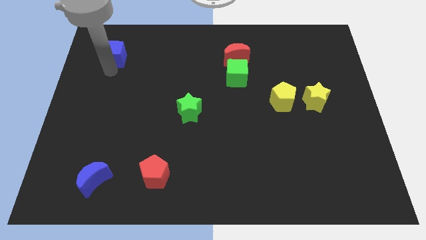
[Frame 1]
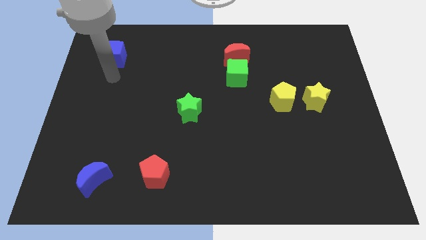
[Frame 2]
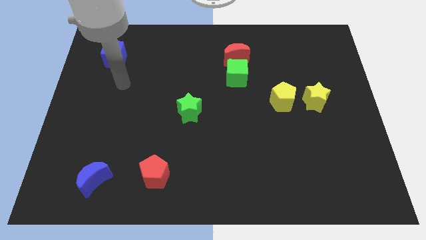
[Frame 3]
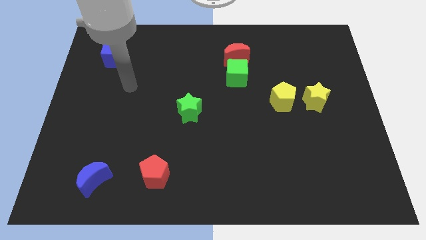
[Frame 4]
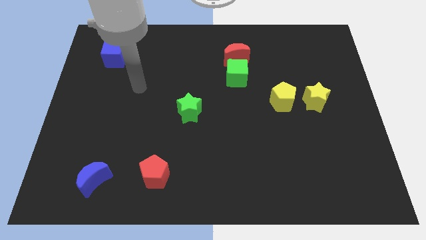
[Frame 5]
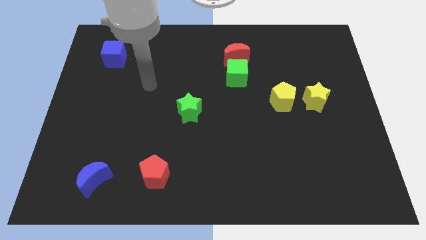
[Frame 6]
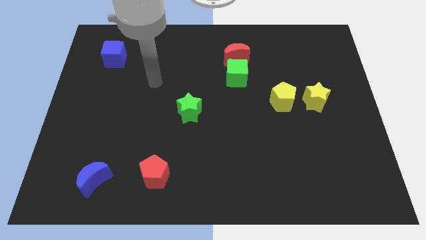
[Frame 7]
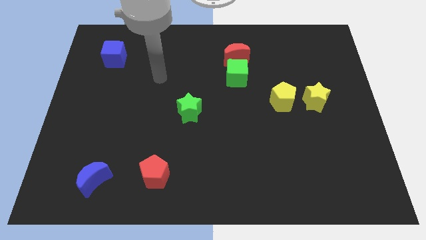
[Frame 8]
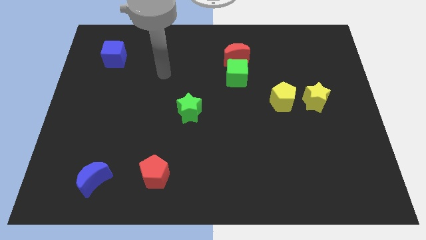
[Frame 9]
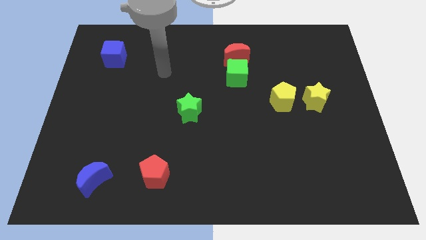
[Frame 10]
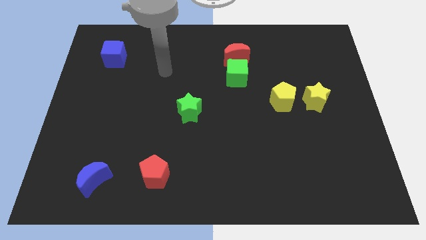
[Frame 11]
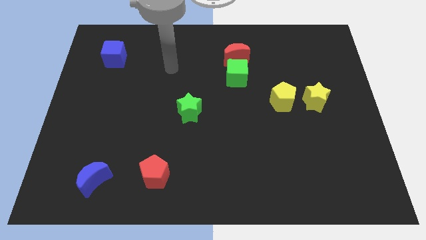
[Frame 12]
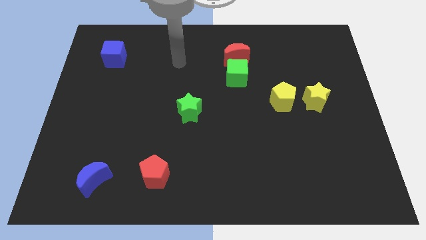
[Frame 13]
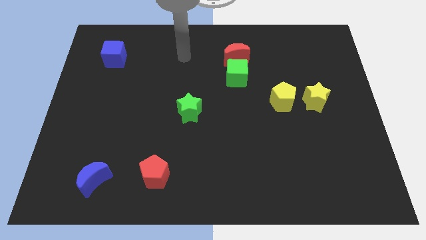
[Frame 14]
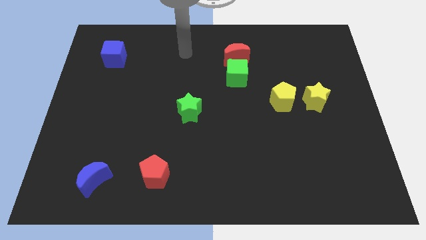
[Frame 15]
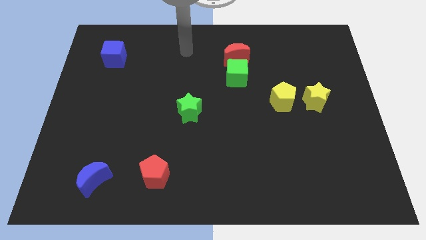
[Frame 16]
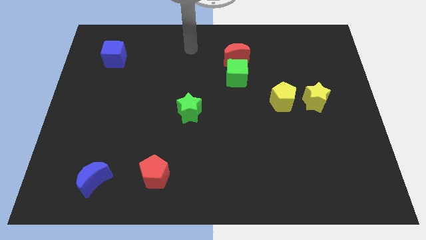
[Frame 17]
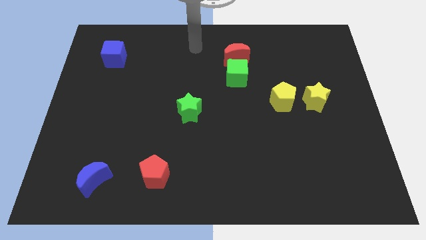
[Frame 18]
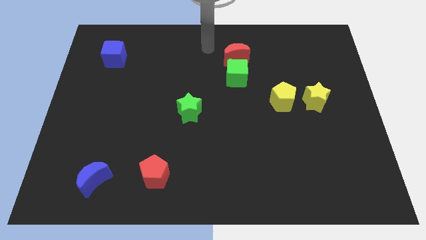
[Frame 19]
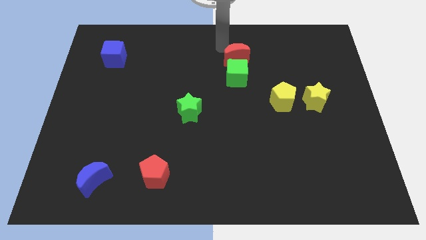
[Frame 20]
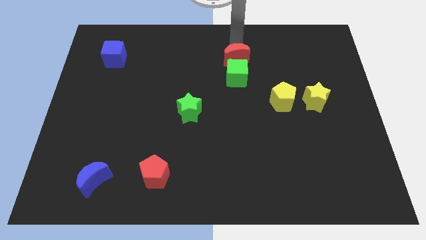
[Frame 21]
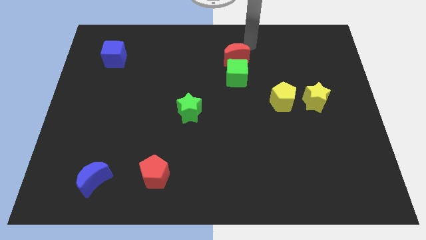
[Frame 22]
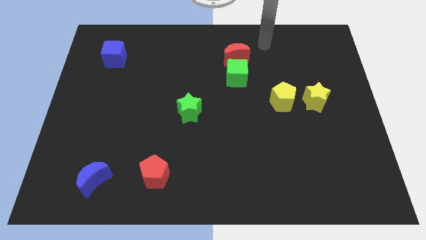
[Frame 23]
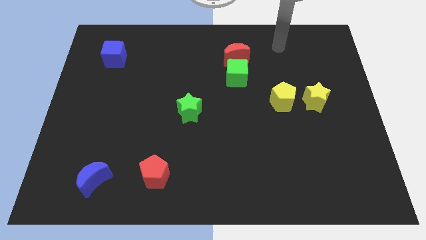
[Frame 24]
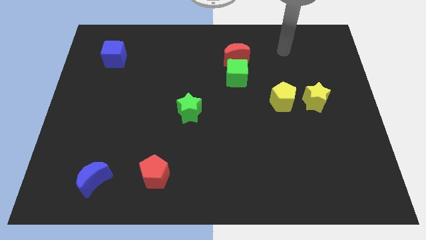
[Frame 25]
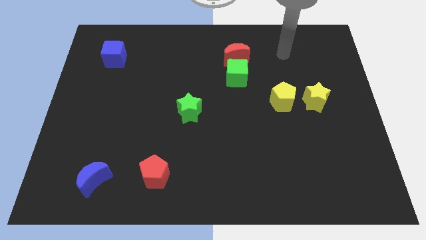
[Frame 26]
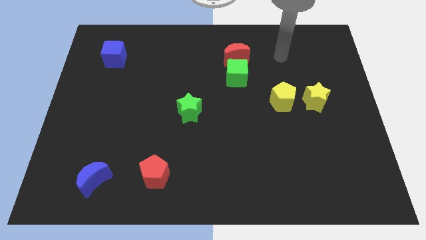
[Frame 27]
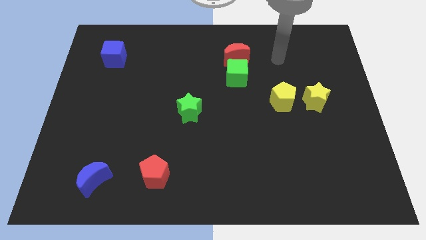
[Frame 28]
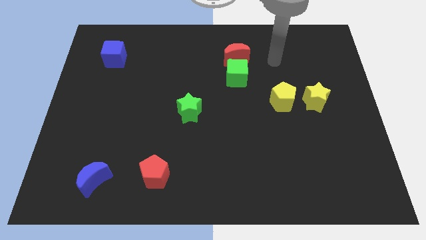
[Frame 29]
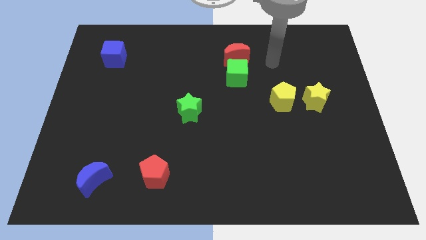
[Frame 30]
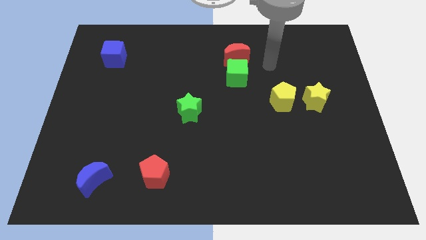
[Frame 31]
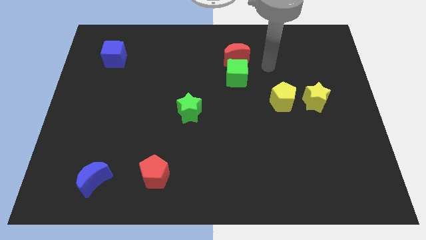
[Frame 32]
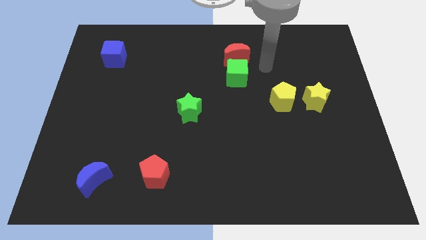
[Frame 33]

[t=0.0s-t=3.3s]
go away from the blue cube

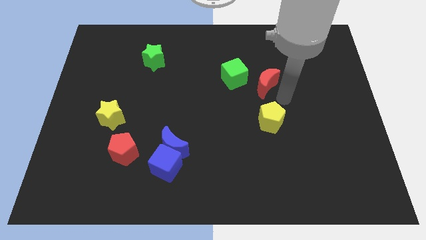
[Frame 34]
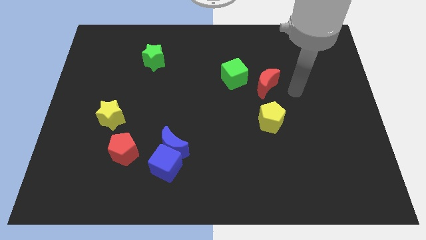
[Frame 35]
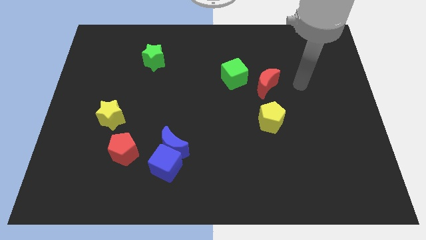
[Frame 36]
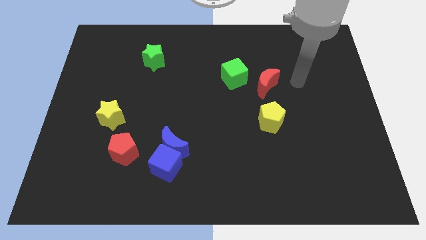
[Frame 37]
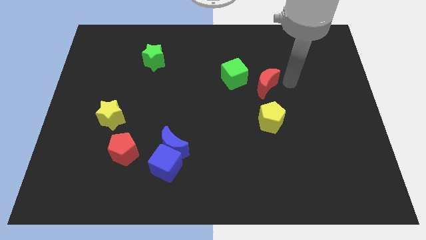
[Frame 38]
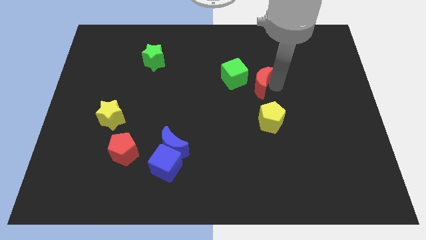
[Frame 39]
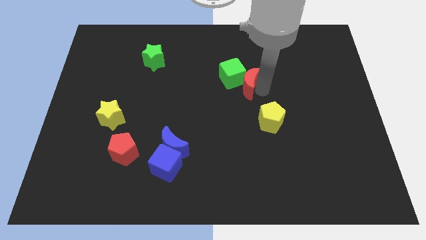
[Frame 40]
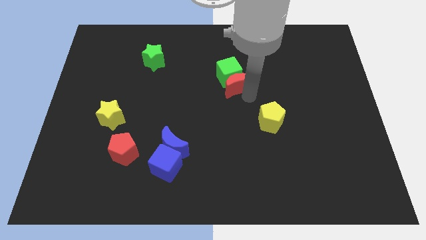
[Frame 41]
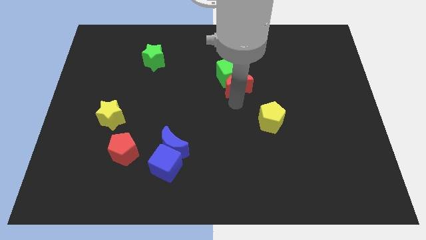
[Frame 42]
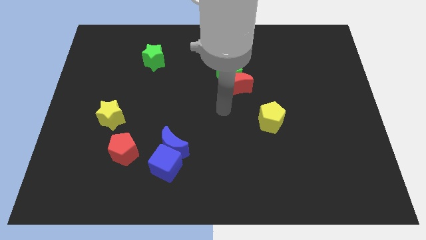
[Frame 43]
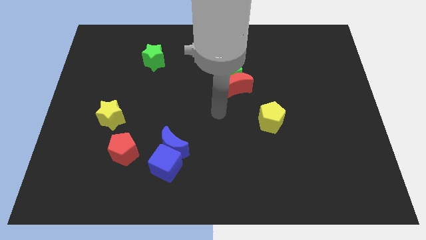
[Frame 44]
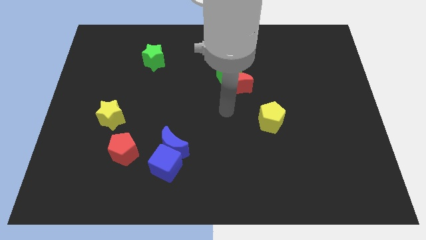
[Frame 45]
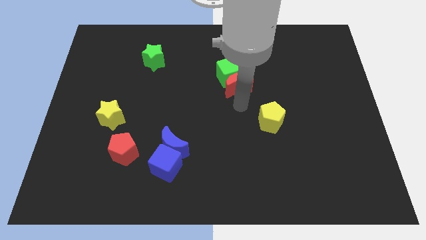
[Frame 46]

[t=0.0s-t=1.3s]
move the red crecent to the bottom side of the green cube

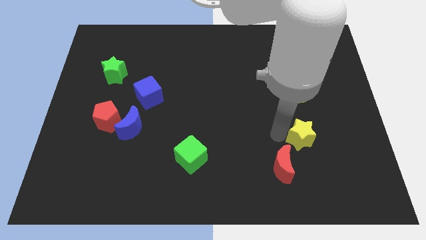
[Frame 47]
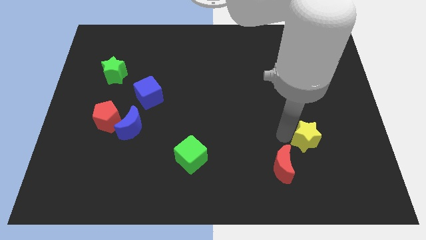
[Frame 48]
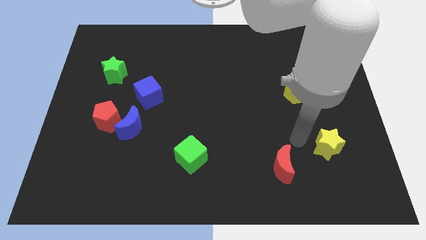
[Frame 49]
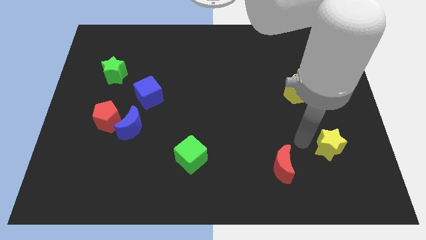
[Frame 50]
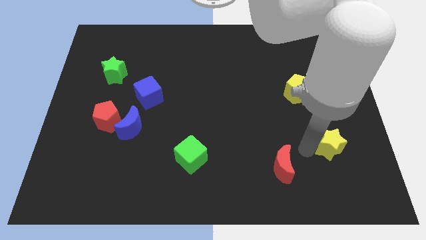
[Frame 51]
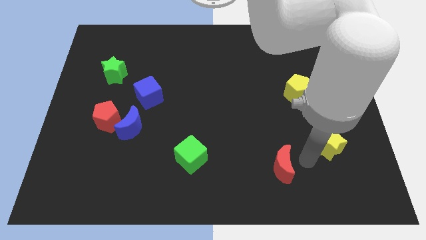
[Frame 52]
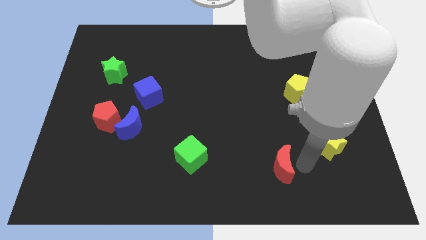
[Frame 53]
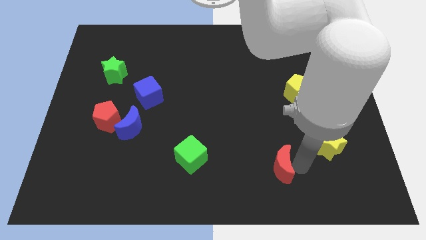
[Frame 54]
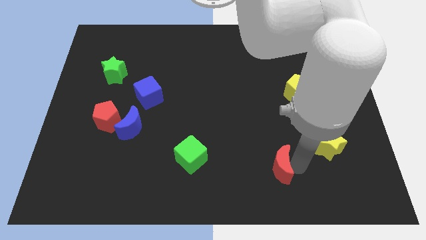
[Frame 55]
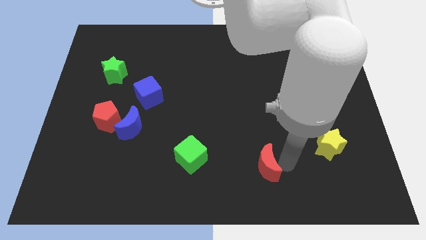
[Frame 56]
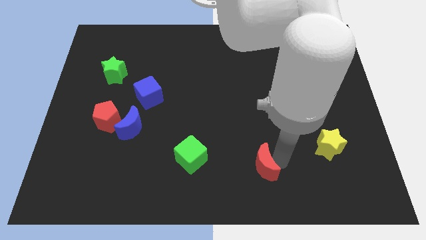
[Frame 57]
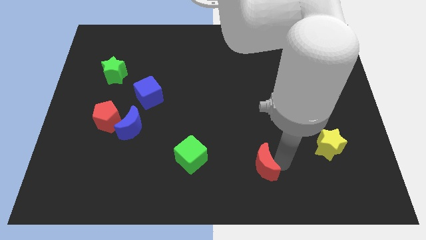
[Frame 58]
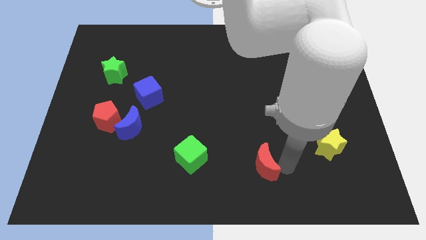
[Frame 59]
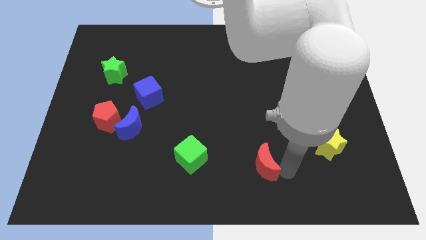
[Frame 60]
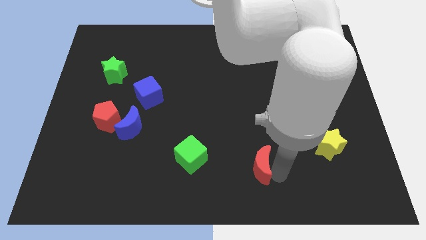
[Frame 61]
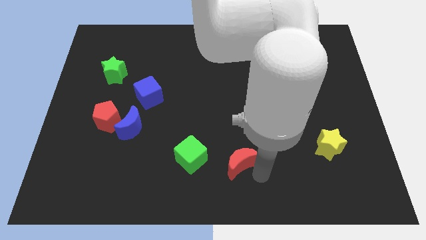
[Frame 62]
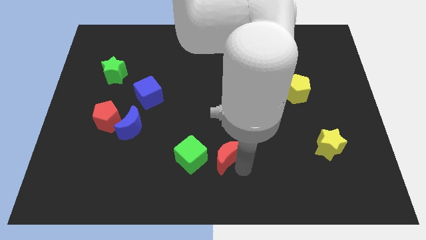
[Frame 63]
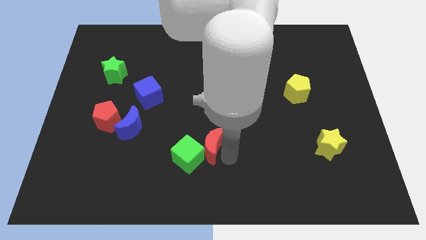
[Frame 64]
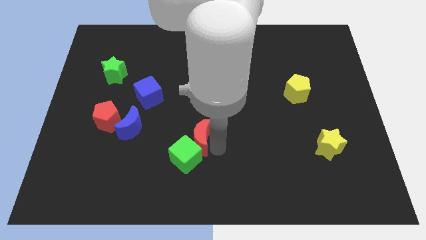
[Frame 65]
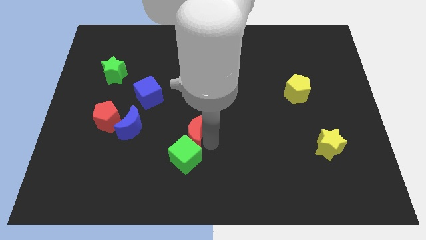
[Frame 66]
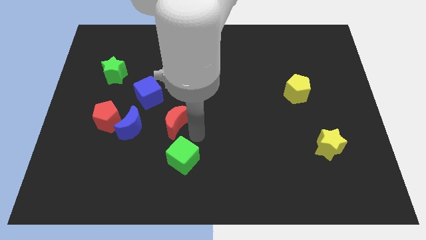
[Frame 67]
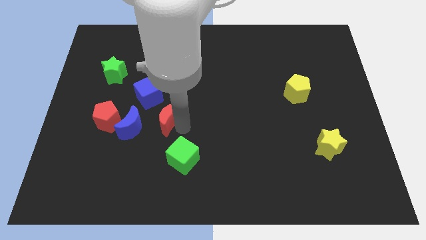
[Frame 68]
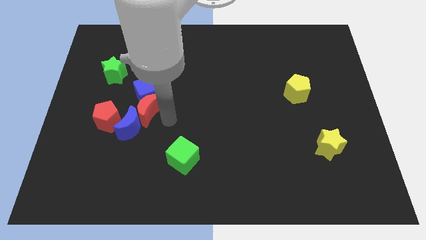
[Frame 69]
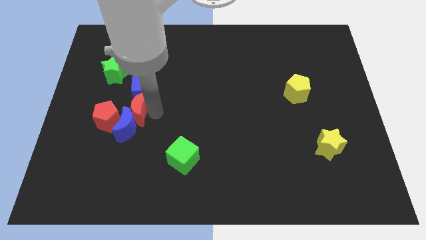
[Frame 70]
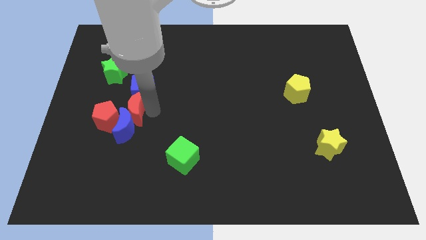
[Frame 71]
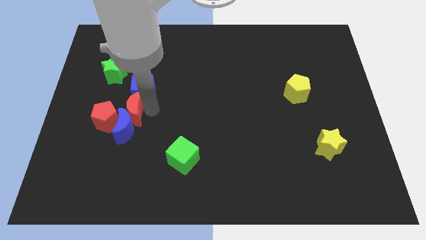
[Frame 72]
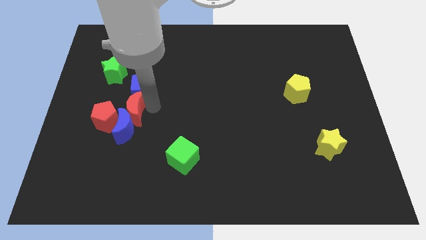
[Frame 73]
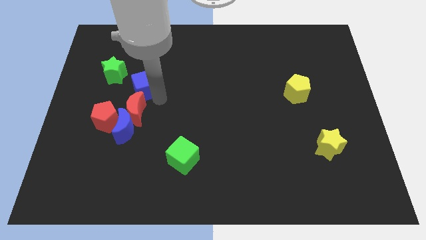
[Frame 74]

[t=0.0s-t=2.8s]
place the red moon in between the blue cube and blue moon

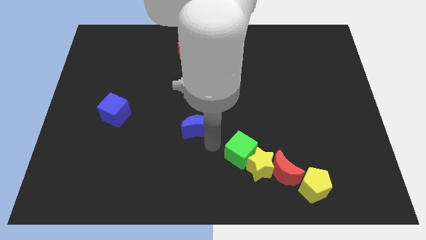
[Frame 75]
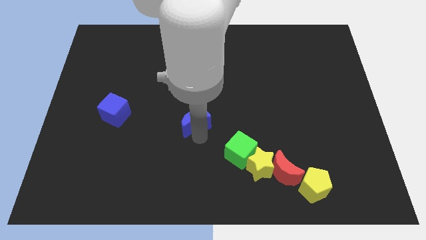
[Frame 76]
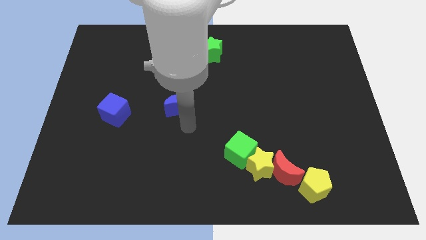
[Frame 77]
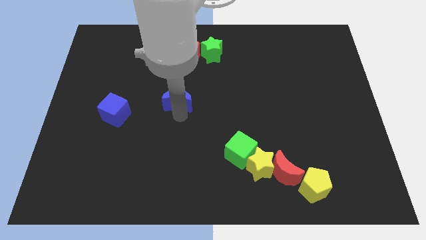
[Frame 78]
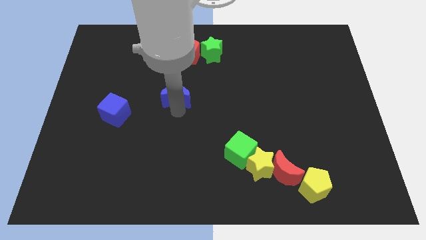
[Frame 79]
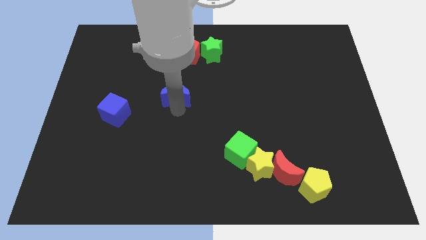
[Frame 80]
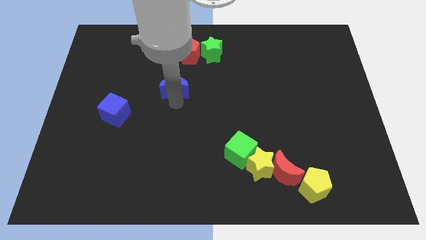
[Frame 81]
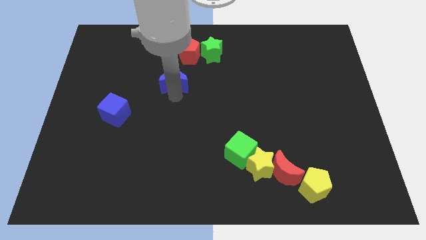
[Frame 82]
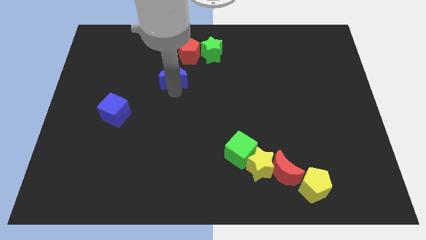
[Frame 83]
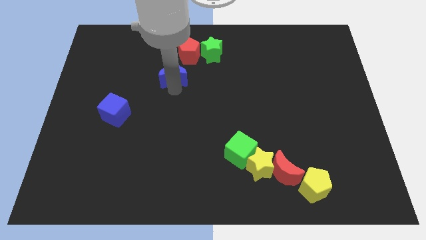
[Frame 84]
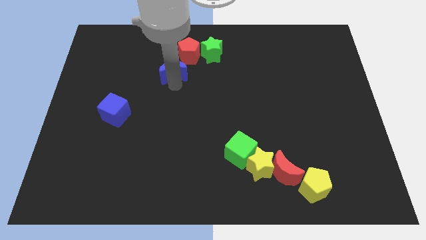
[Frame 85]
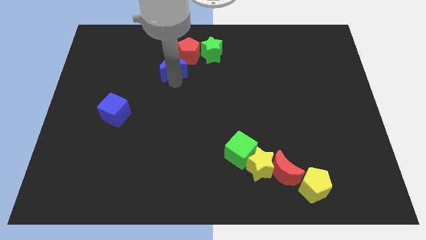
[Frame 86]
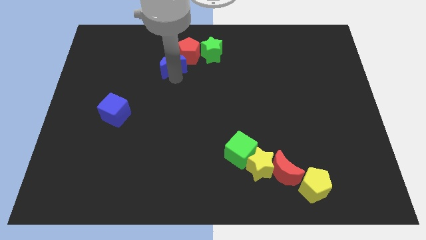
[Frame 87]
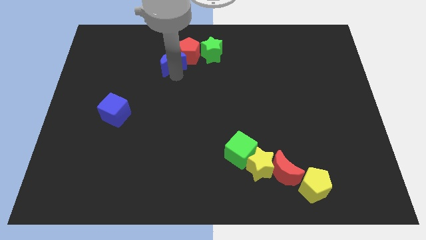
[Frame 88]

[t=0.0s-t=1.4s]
place the blue moon at the bottom left side of red pentagon

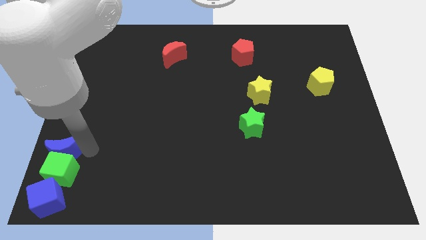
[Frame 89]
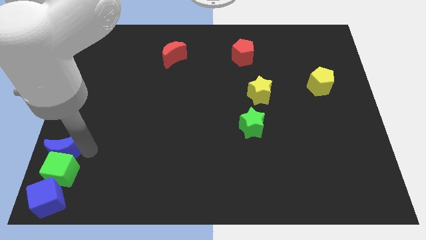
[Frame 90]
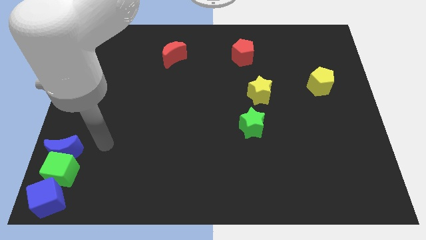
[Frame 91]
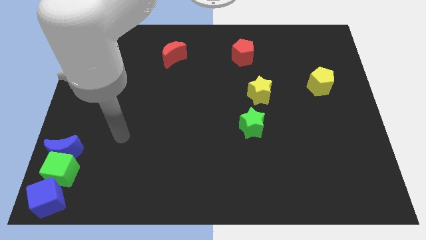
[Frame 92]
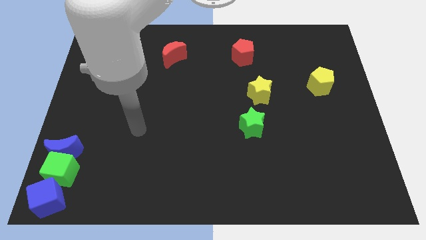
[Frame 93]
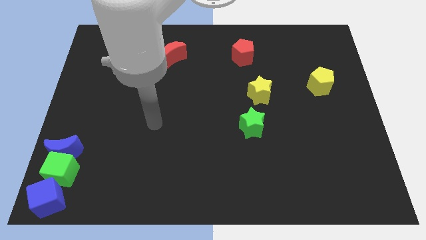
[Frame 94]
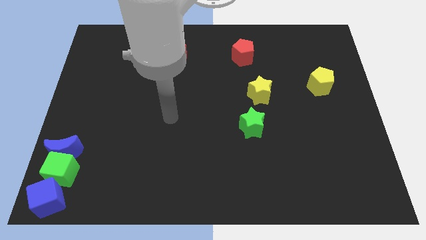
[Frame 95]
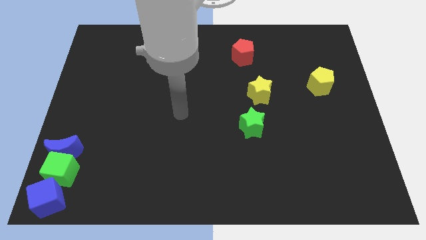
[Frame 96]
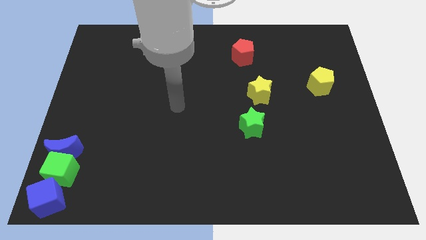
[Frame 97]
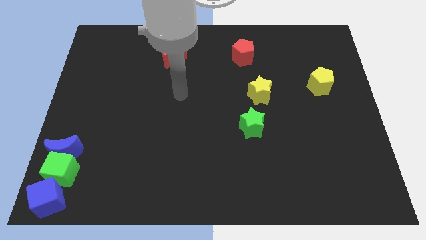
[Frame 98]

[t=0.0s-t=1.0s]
move your arm away from blue moon
